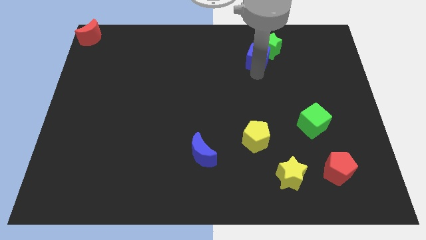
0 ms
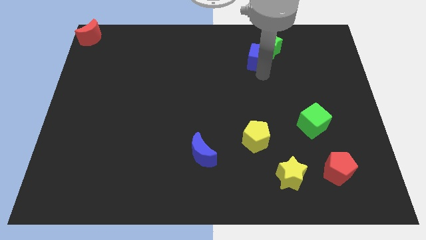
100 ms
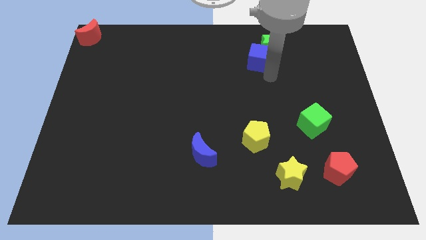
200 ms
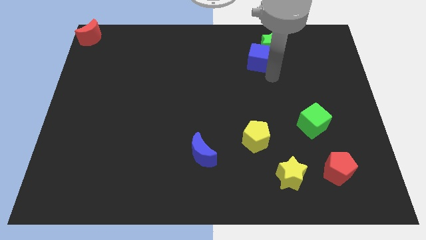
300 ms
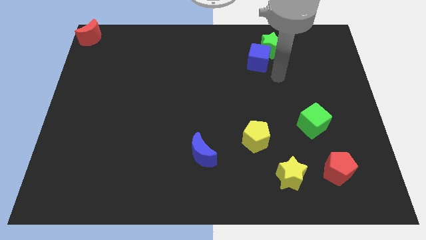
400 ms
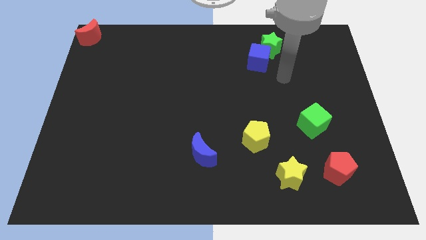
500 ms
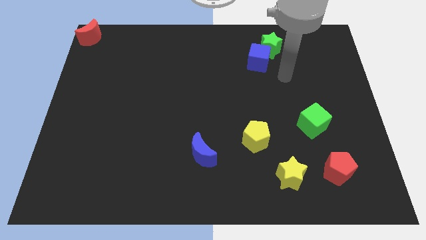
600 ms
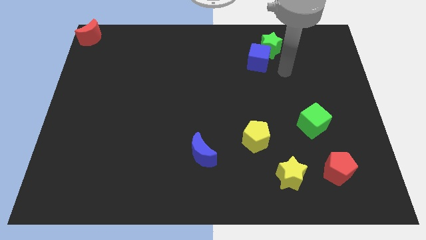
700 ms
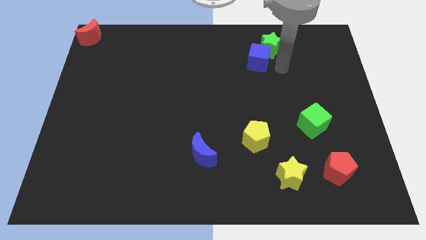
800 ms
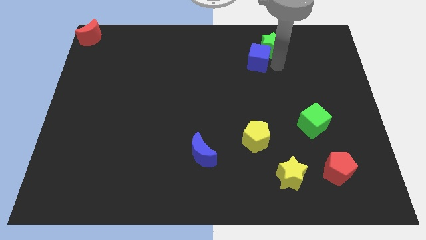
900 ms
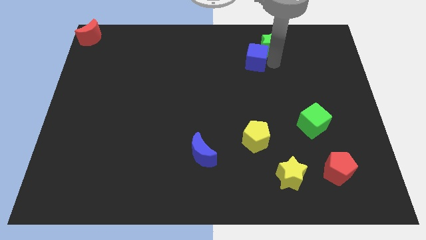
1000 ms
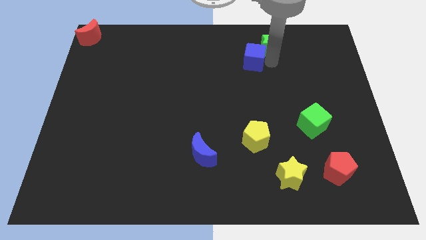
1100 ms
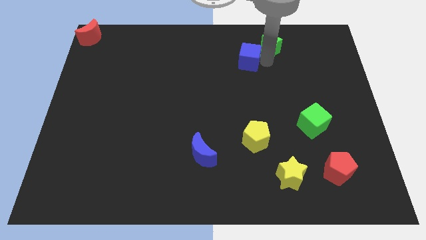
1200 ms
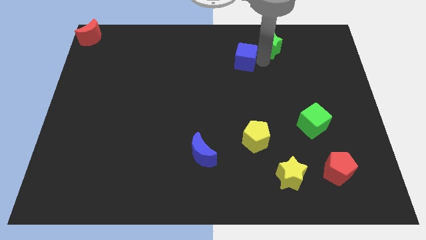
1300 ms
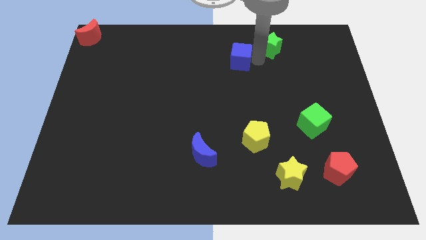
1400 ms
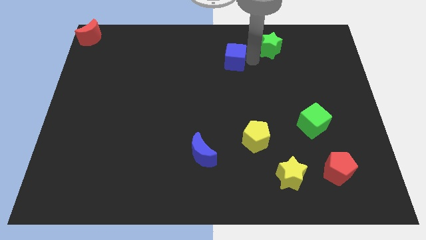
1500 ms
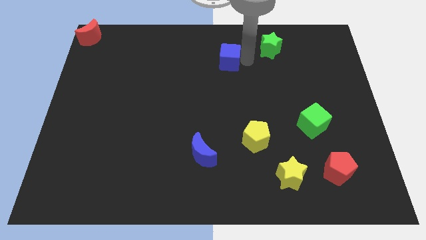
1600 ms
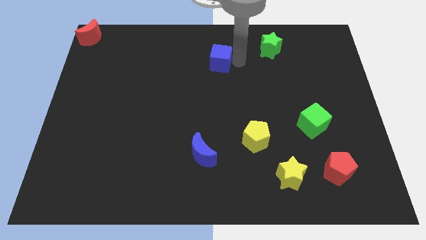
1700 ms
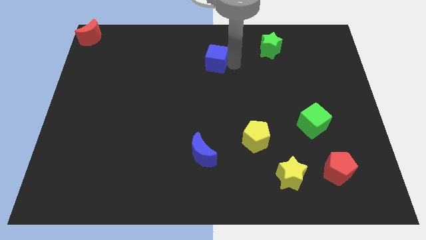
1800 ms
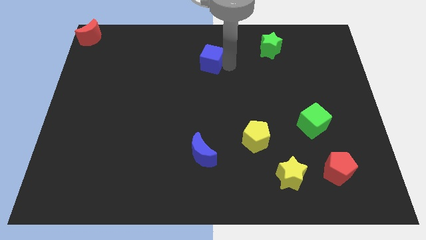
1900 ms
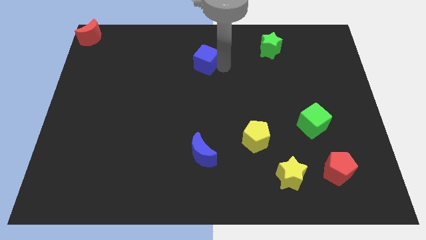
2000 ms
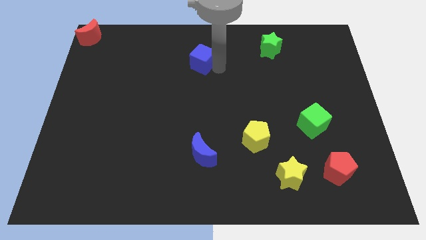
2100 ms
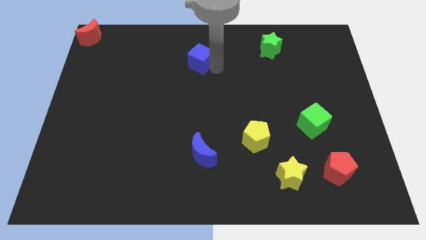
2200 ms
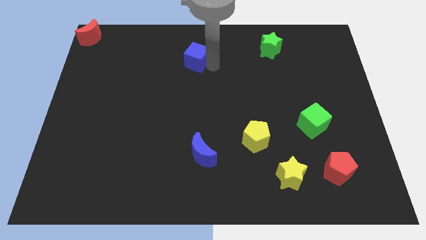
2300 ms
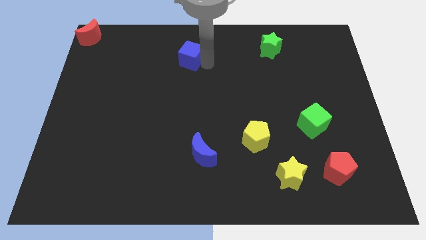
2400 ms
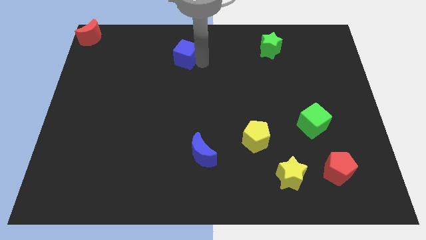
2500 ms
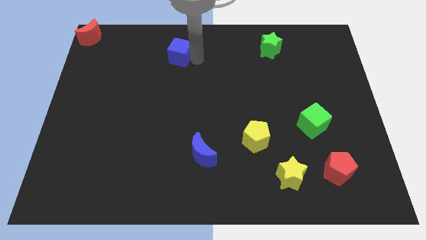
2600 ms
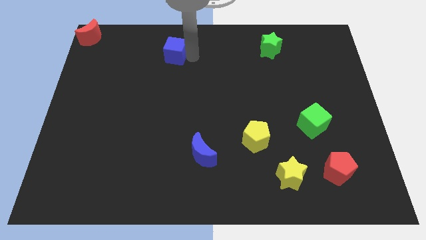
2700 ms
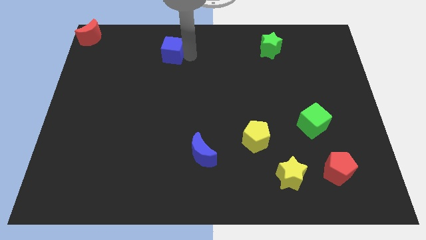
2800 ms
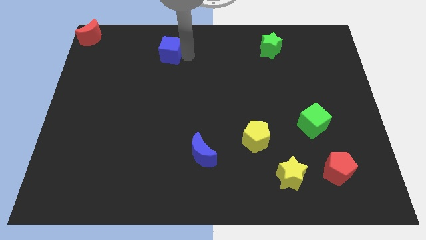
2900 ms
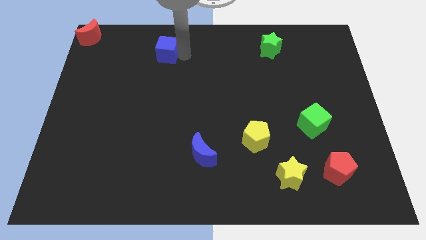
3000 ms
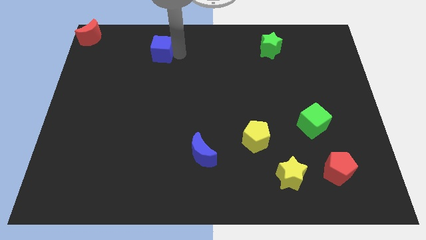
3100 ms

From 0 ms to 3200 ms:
place the blue cube above the blue moon

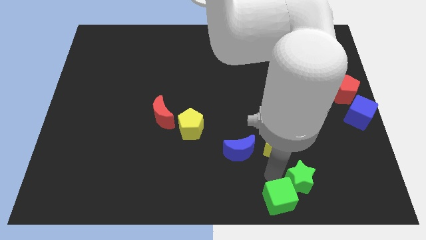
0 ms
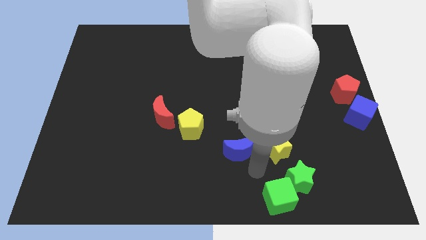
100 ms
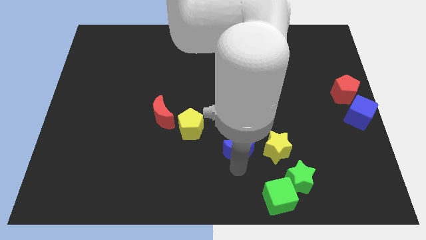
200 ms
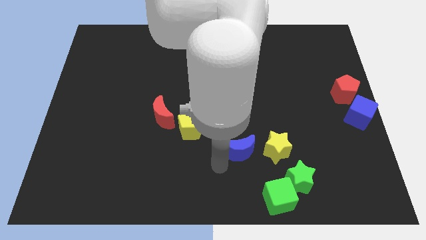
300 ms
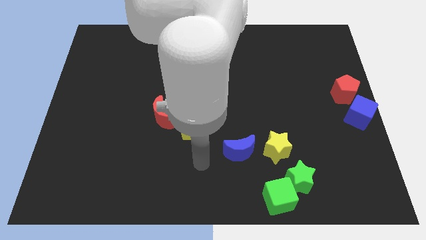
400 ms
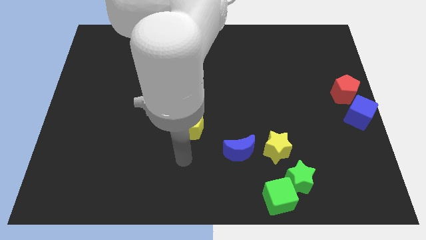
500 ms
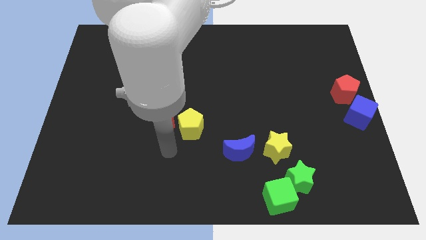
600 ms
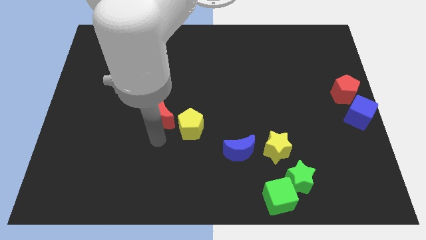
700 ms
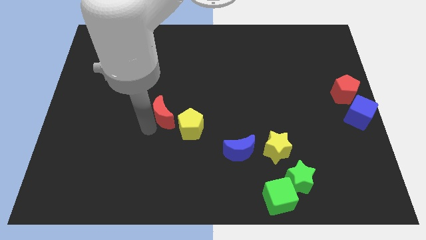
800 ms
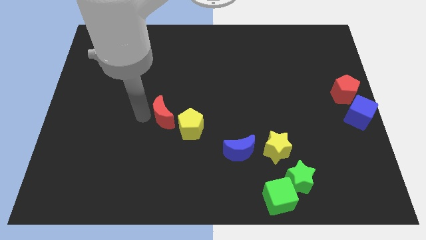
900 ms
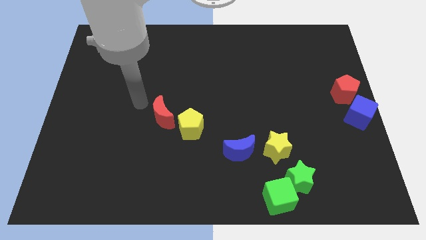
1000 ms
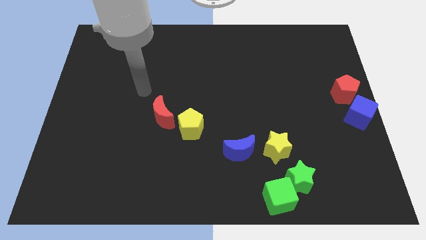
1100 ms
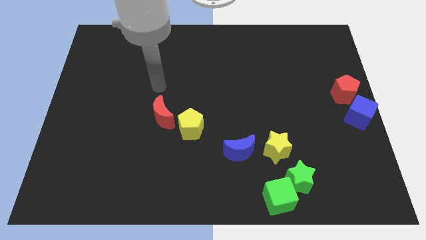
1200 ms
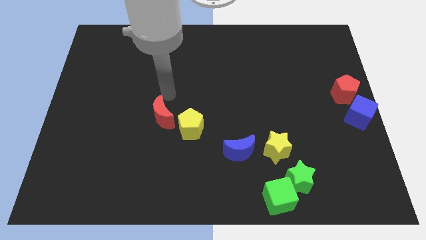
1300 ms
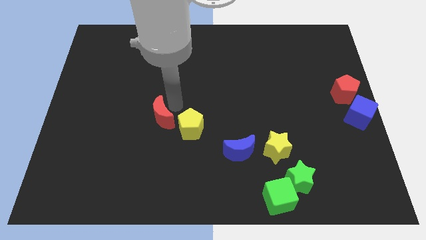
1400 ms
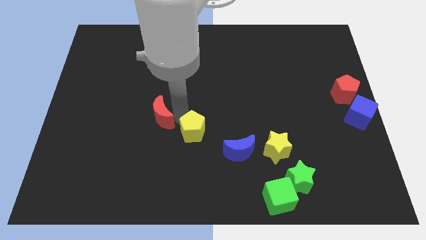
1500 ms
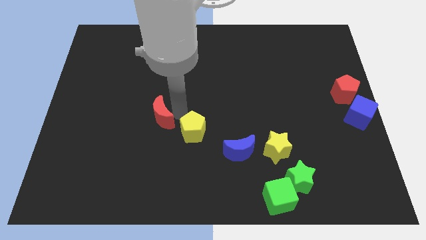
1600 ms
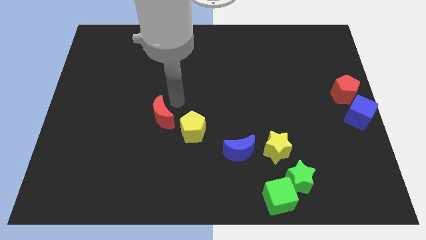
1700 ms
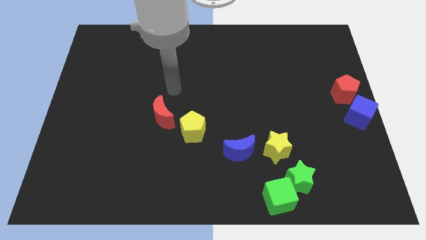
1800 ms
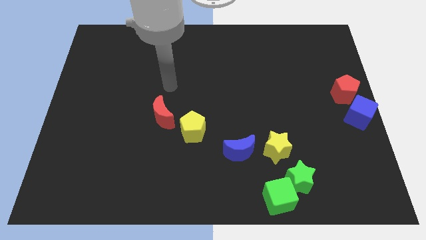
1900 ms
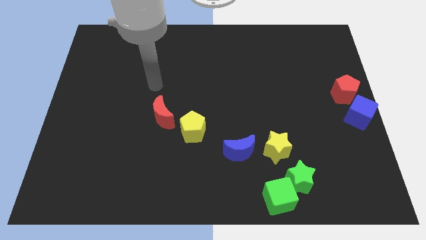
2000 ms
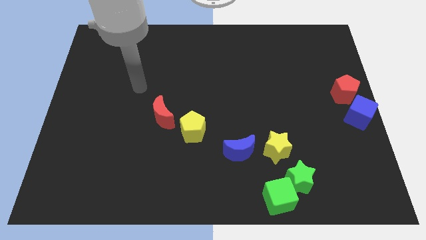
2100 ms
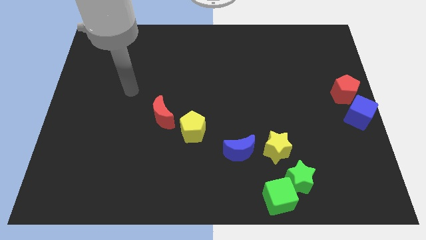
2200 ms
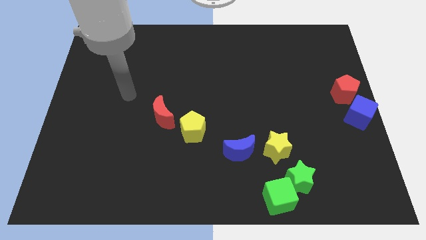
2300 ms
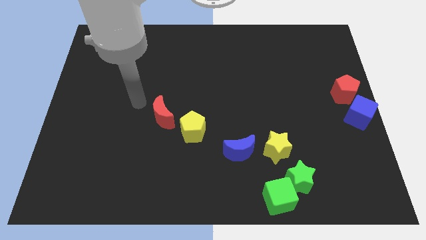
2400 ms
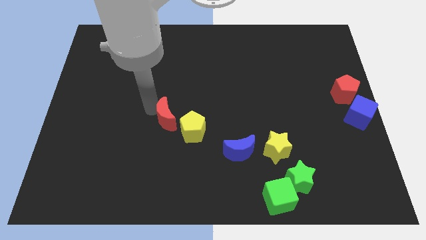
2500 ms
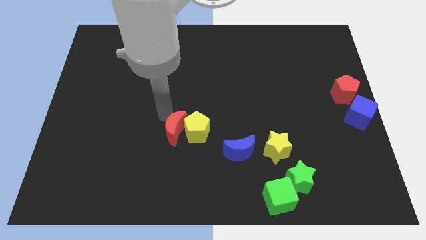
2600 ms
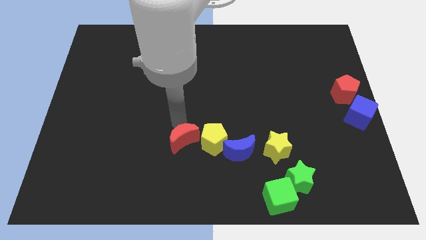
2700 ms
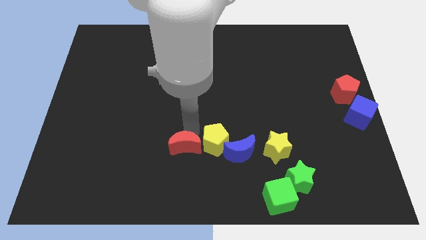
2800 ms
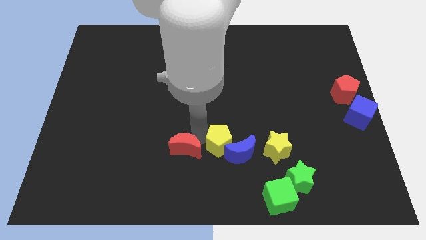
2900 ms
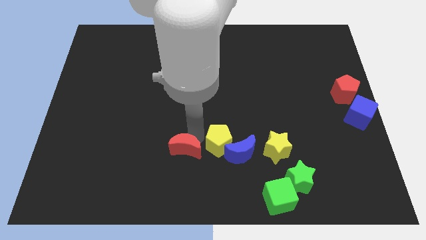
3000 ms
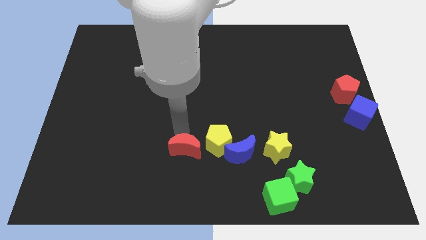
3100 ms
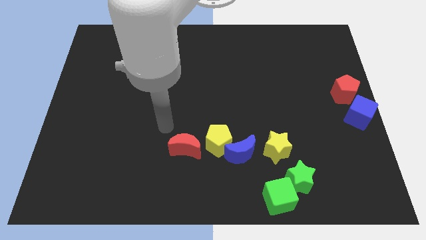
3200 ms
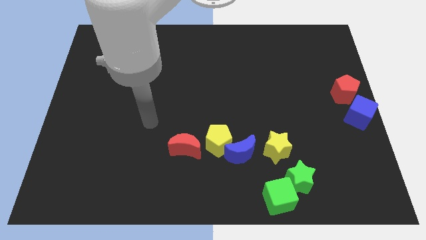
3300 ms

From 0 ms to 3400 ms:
move the yellow pentagon and red crescent to the left side of the blue crescent

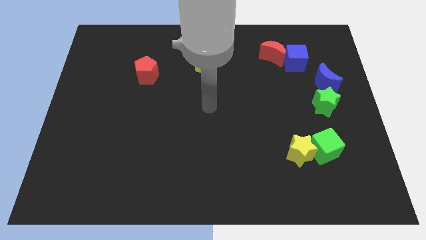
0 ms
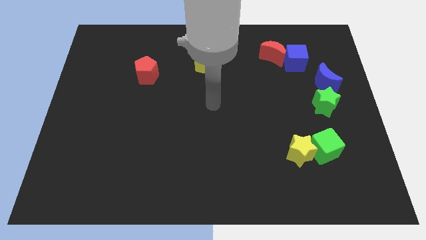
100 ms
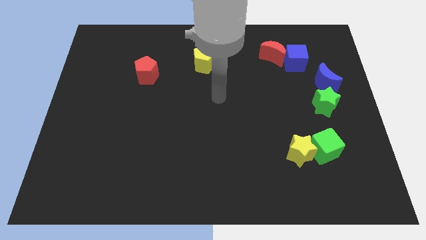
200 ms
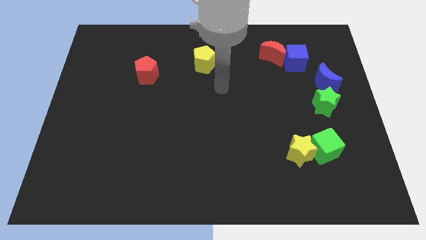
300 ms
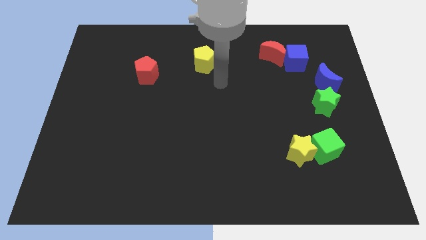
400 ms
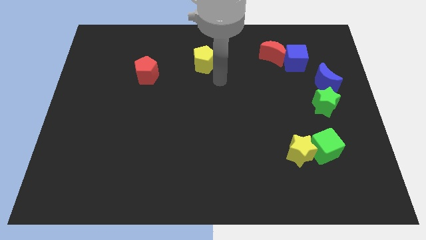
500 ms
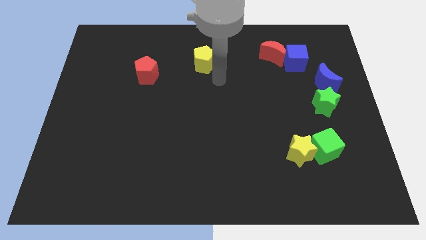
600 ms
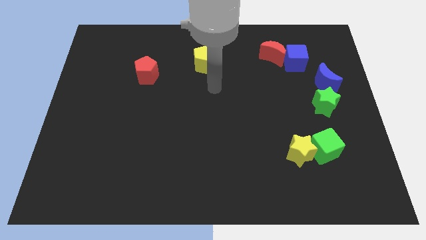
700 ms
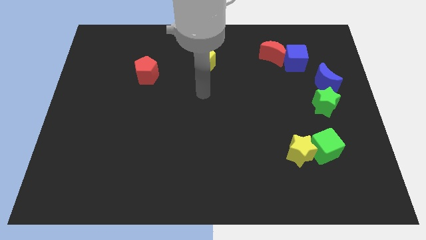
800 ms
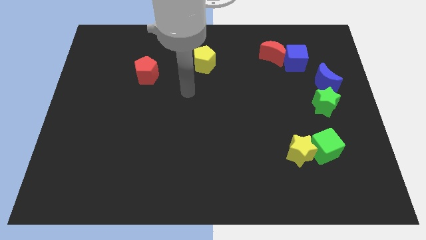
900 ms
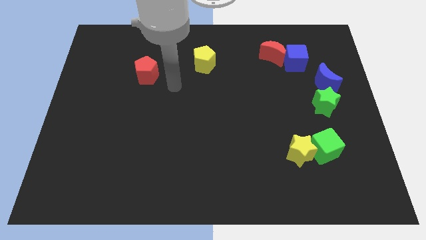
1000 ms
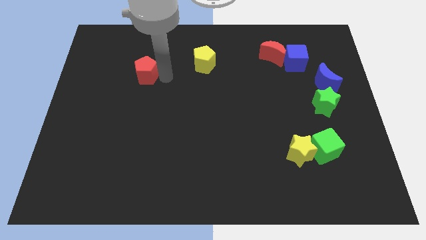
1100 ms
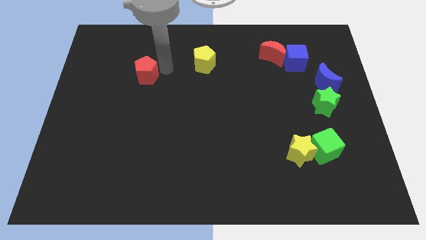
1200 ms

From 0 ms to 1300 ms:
point your arm in between the pentagons

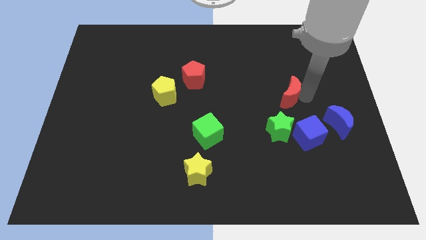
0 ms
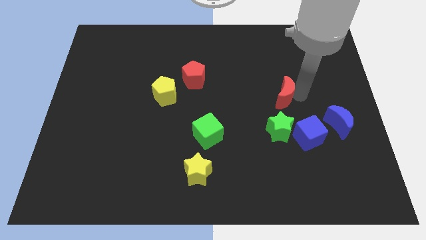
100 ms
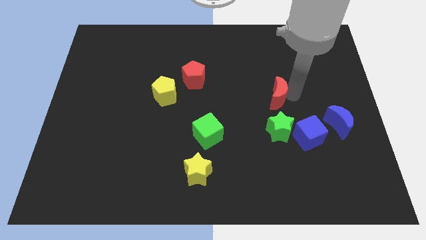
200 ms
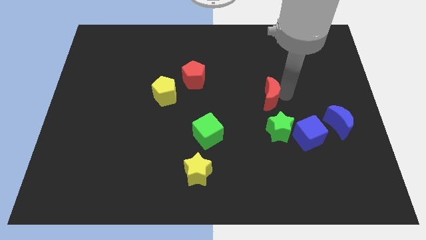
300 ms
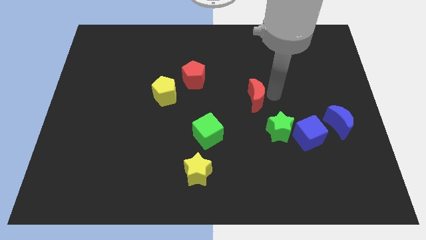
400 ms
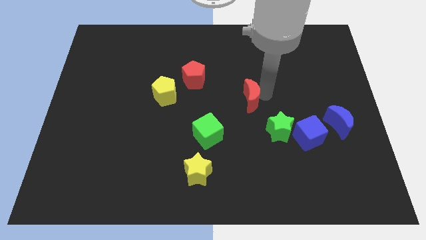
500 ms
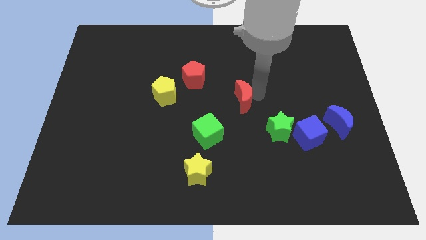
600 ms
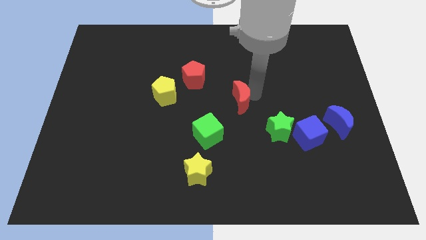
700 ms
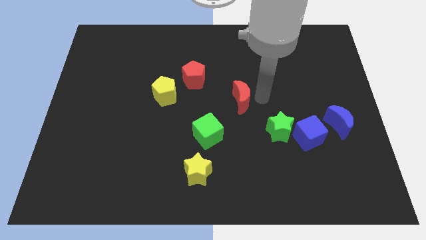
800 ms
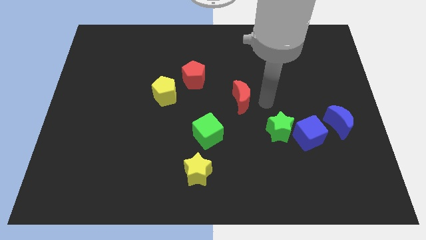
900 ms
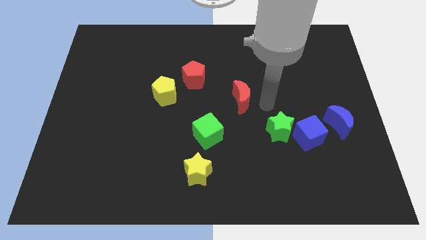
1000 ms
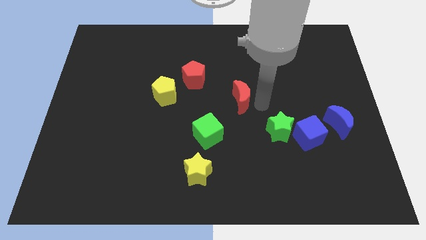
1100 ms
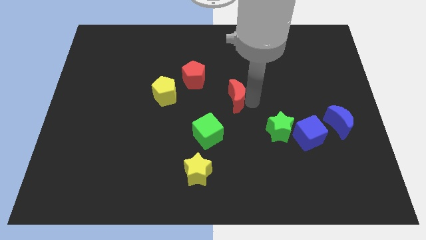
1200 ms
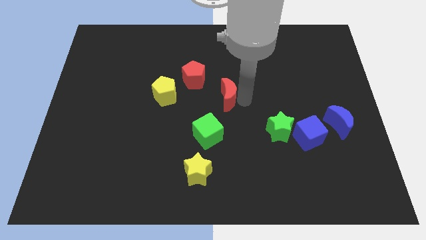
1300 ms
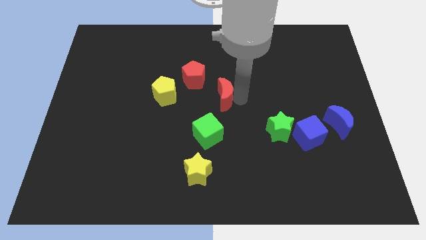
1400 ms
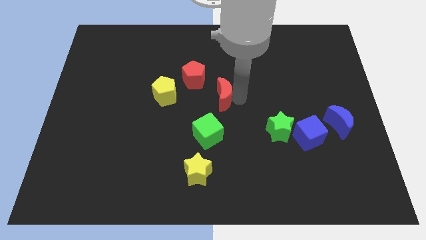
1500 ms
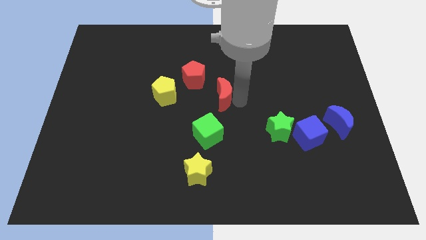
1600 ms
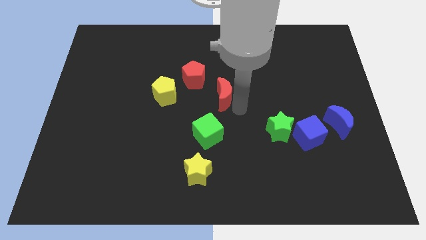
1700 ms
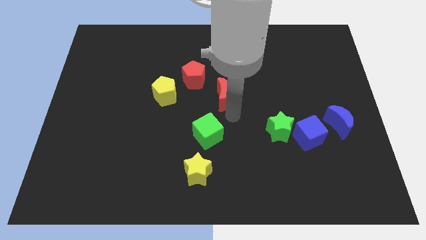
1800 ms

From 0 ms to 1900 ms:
move the red moon close to the red pentagon
